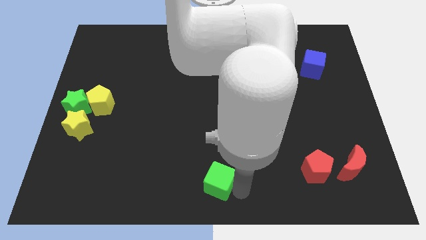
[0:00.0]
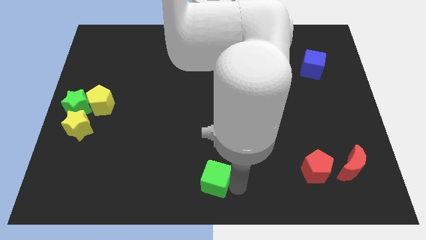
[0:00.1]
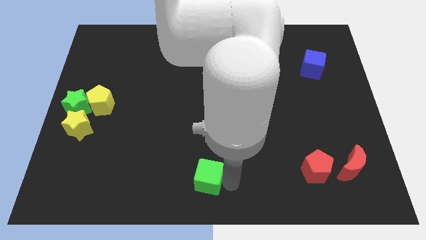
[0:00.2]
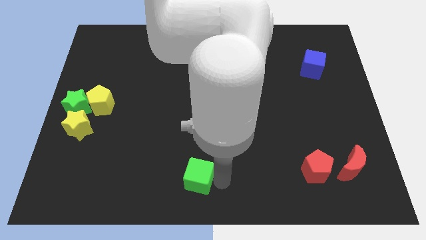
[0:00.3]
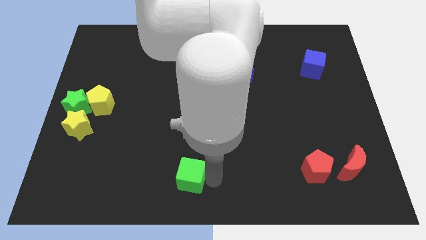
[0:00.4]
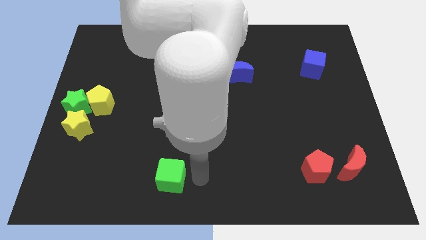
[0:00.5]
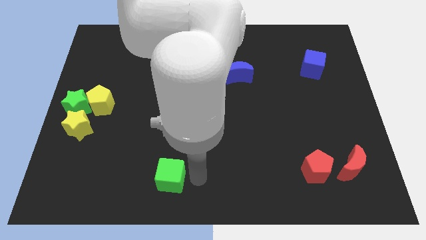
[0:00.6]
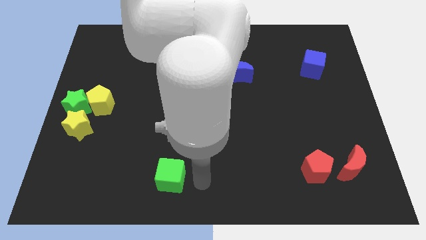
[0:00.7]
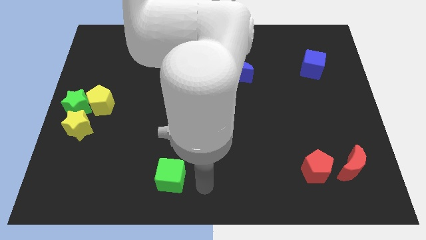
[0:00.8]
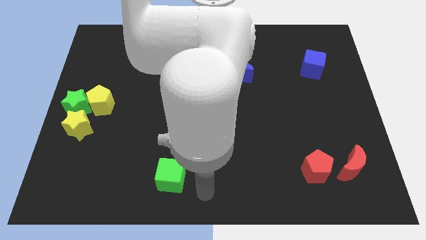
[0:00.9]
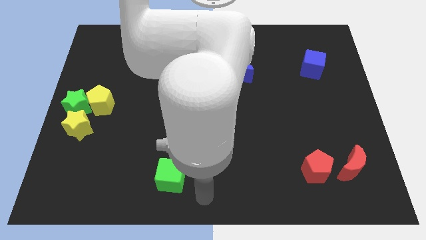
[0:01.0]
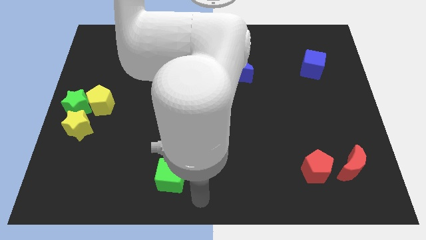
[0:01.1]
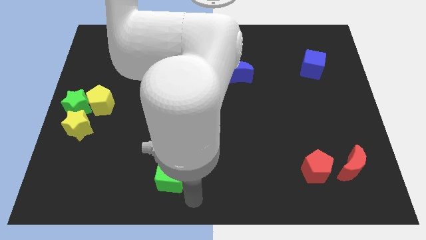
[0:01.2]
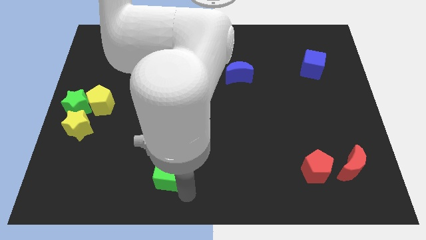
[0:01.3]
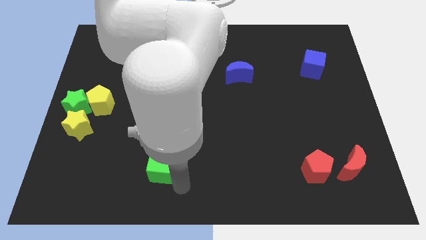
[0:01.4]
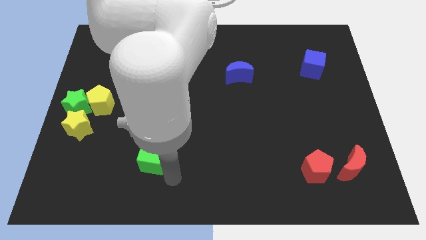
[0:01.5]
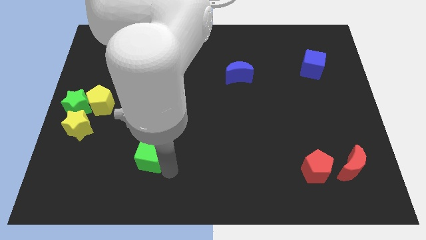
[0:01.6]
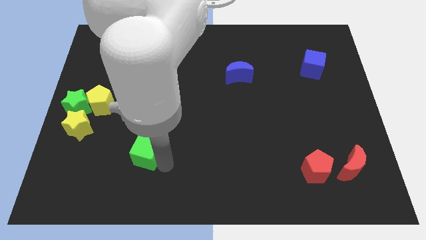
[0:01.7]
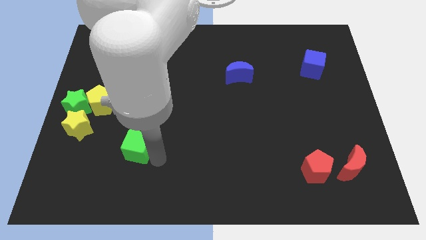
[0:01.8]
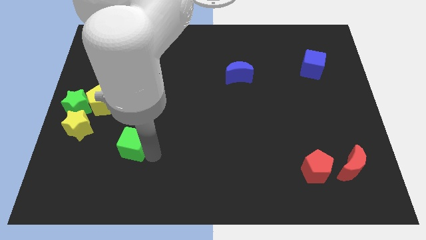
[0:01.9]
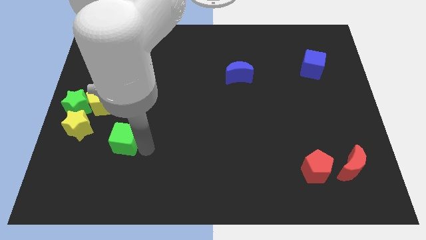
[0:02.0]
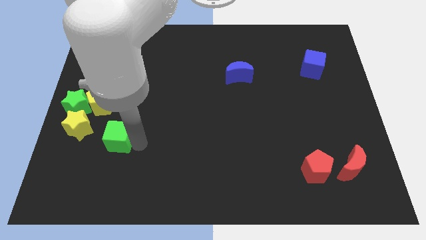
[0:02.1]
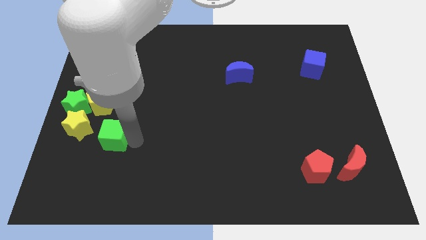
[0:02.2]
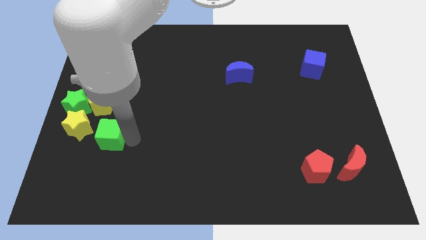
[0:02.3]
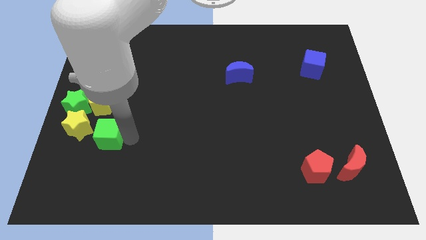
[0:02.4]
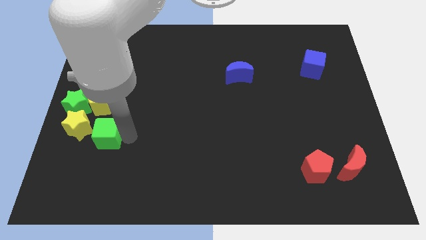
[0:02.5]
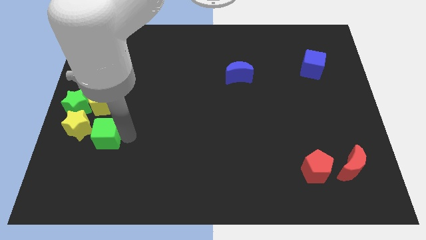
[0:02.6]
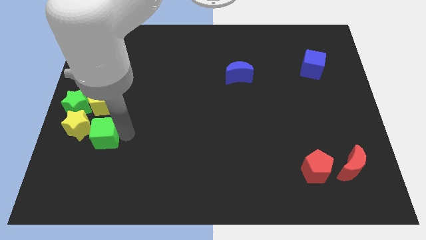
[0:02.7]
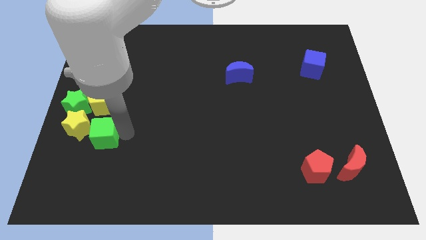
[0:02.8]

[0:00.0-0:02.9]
push the green cube to the bottom of the yellow pentagon

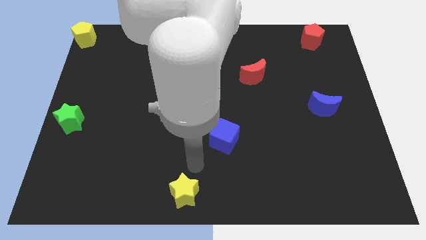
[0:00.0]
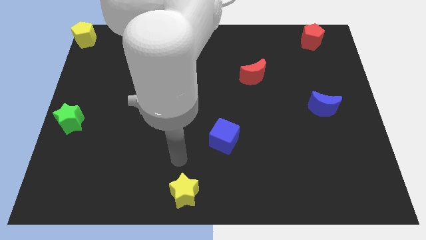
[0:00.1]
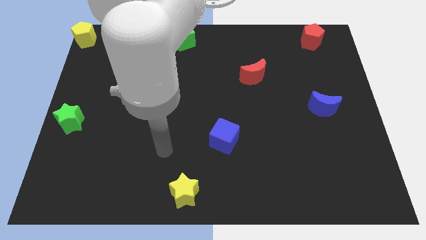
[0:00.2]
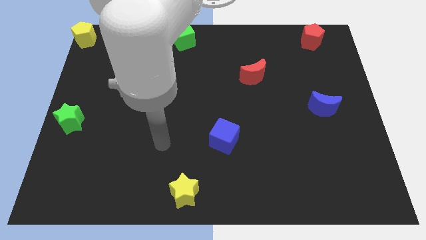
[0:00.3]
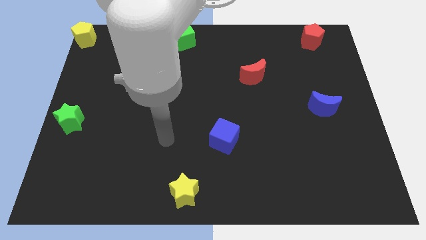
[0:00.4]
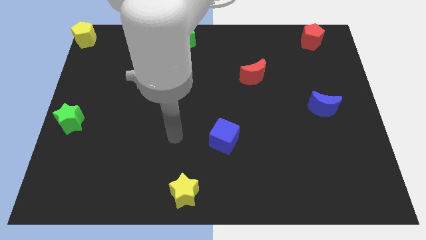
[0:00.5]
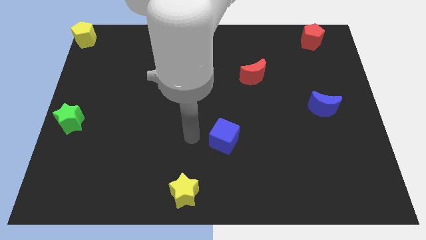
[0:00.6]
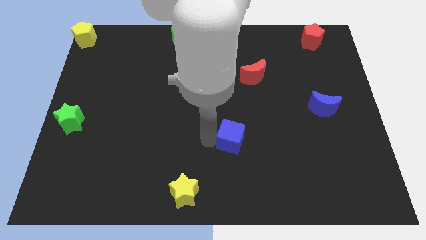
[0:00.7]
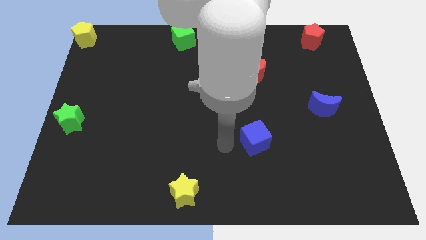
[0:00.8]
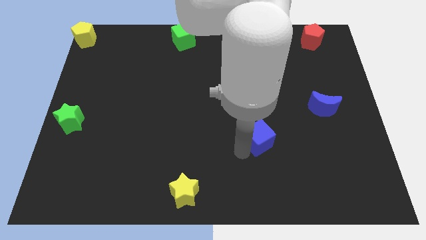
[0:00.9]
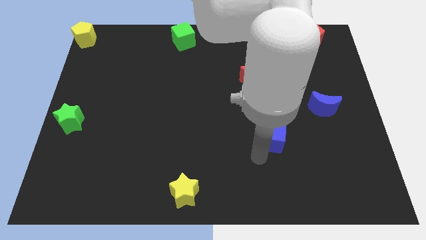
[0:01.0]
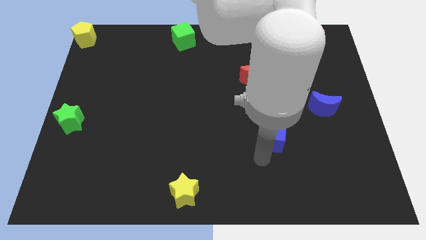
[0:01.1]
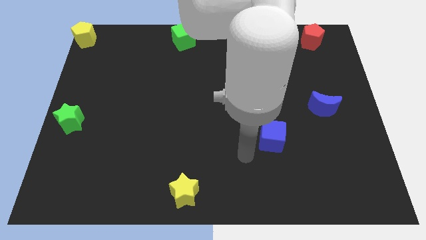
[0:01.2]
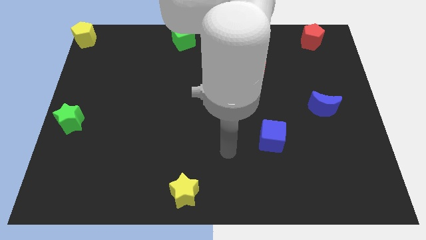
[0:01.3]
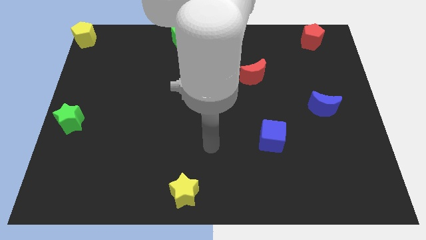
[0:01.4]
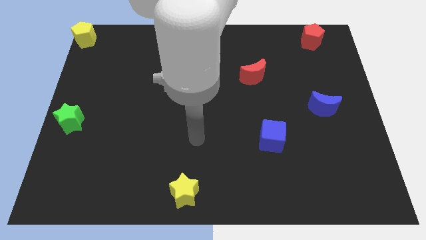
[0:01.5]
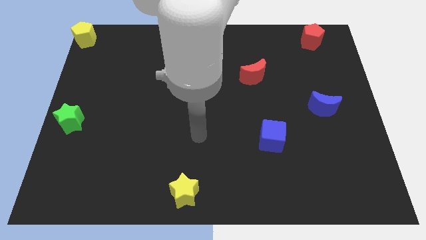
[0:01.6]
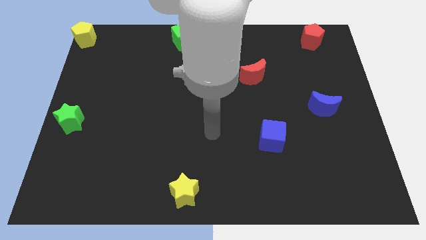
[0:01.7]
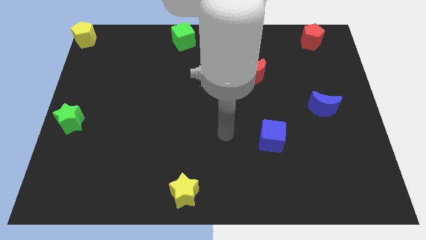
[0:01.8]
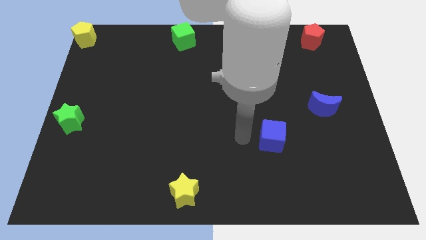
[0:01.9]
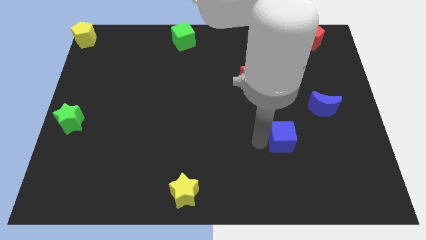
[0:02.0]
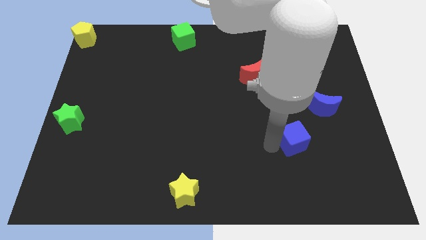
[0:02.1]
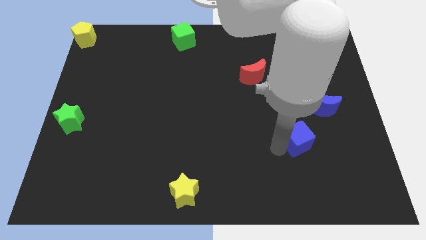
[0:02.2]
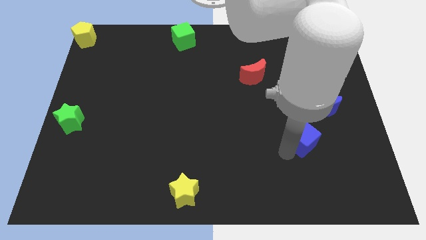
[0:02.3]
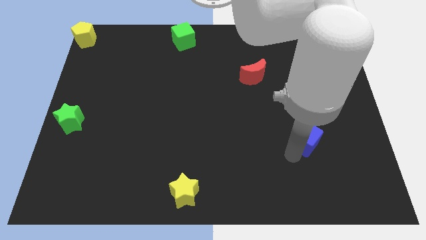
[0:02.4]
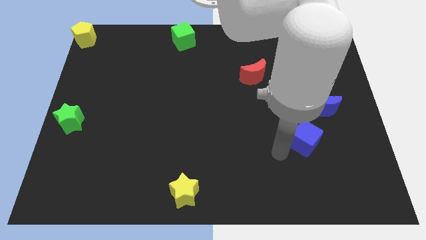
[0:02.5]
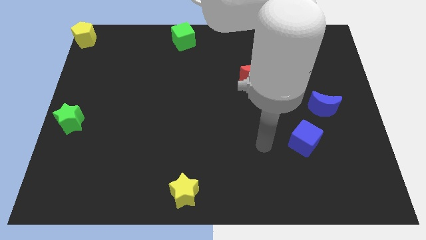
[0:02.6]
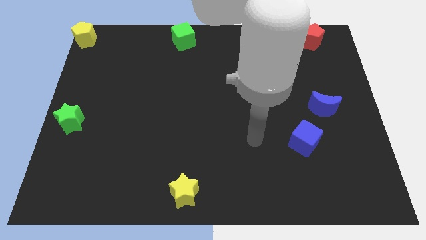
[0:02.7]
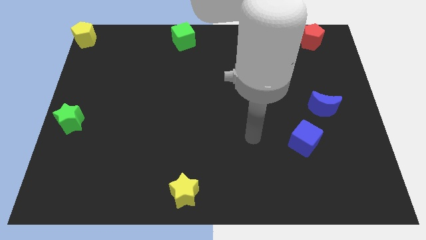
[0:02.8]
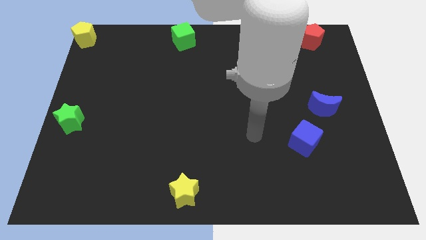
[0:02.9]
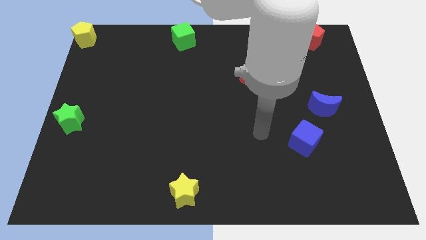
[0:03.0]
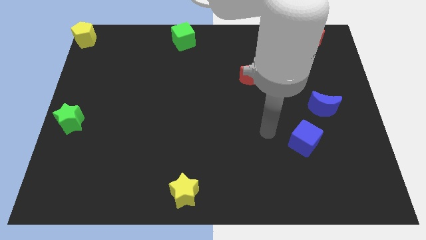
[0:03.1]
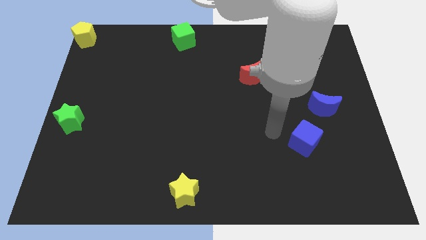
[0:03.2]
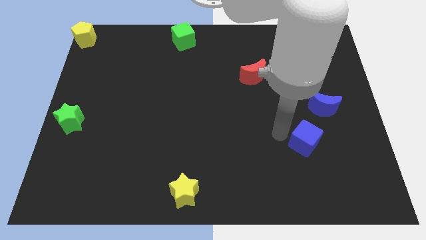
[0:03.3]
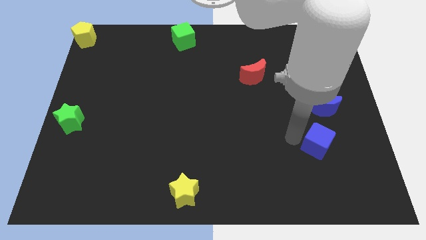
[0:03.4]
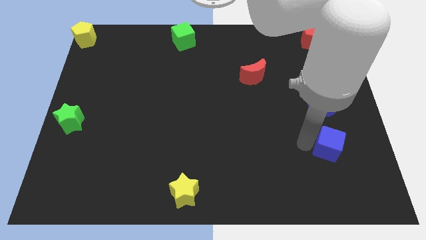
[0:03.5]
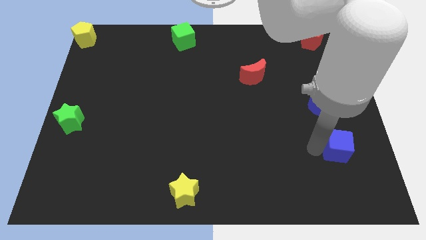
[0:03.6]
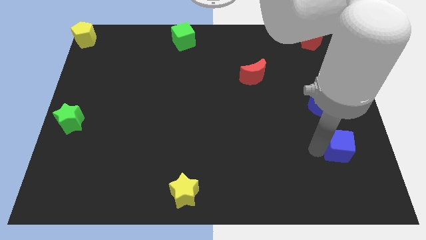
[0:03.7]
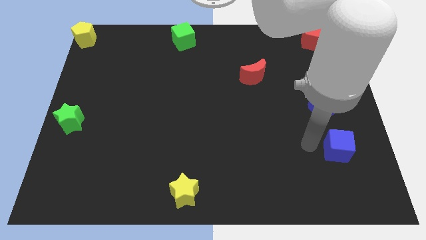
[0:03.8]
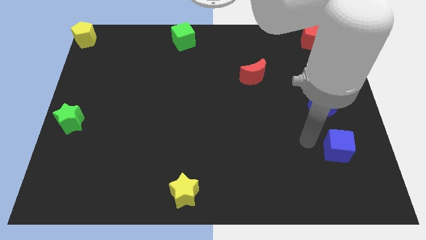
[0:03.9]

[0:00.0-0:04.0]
push the blue cube towards the right center of the board

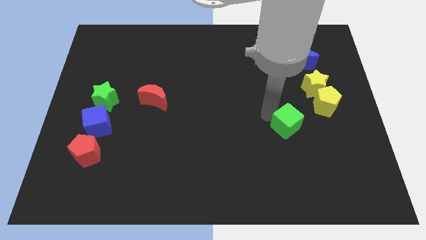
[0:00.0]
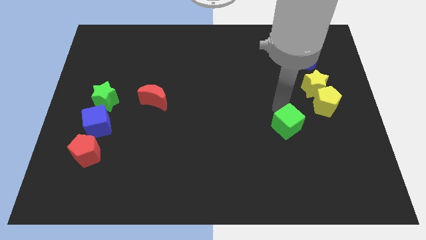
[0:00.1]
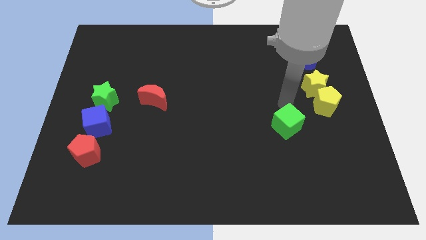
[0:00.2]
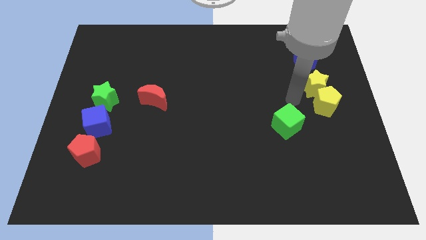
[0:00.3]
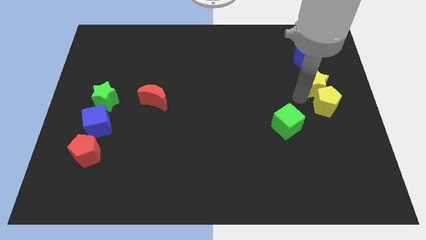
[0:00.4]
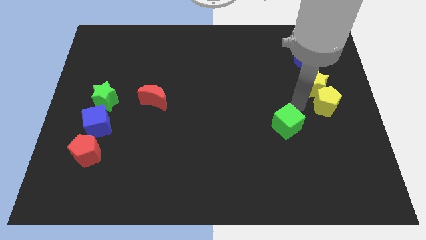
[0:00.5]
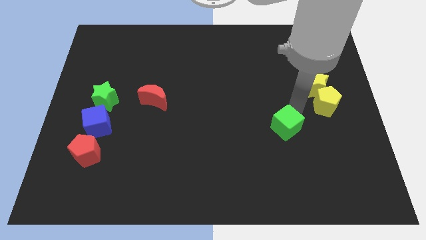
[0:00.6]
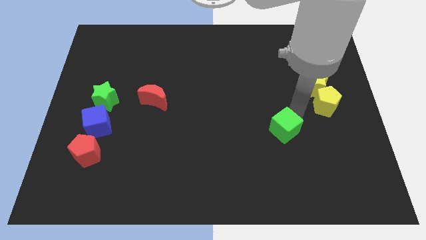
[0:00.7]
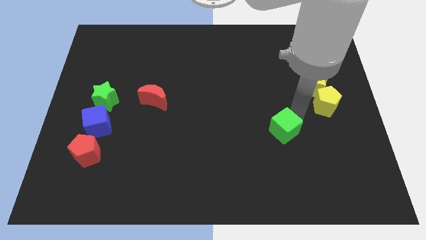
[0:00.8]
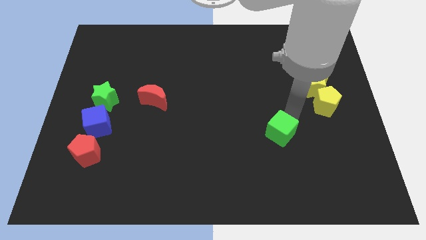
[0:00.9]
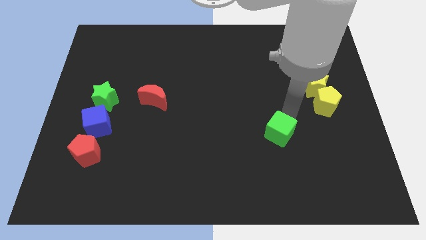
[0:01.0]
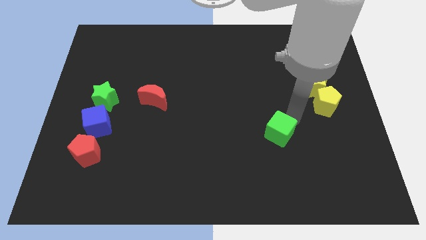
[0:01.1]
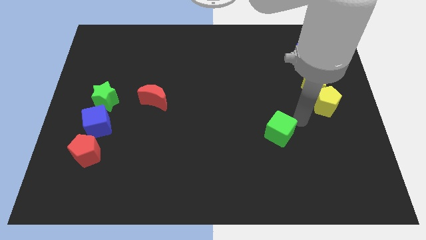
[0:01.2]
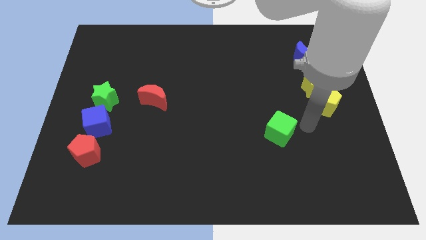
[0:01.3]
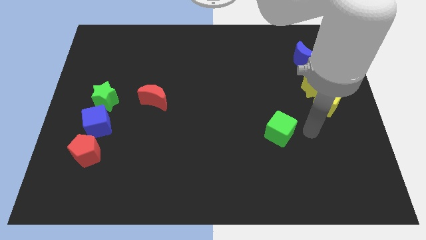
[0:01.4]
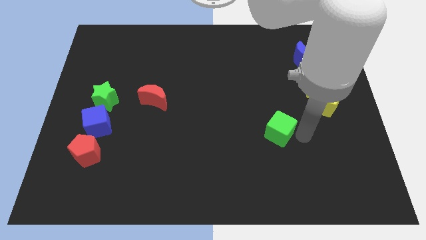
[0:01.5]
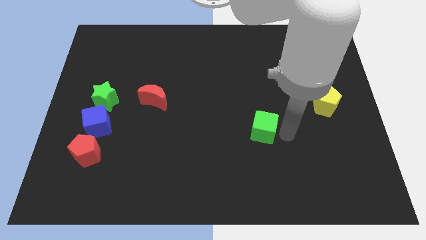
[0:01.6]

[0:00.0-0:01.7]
move green cube towards center

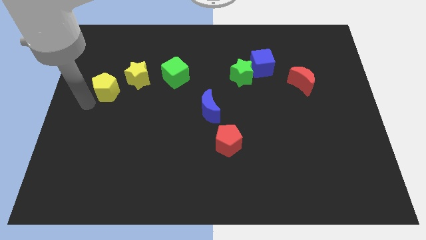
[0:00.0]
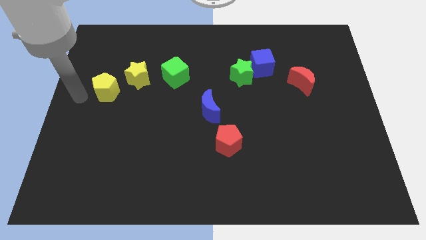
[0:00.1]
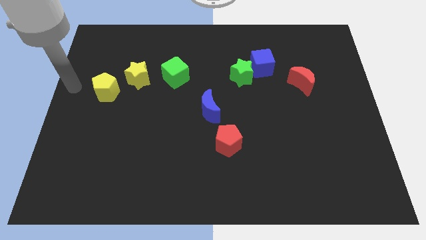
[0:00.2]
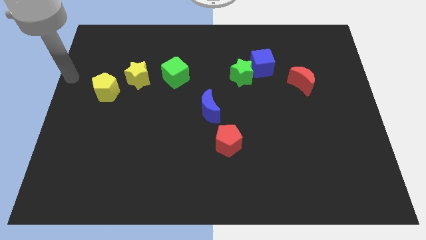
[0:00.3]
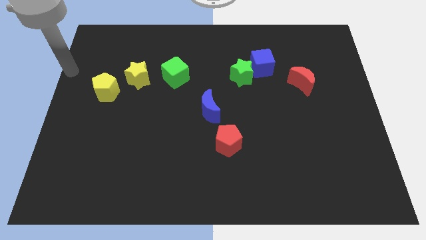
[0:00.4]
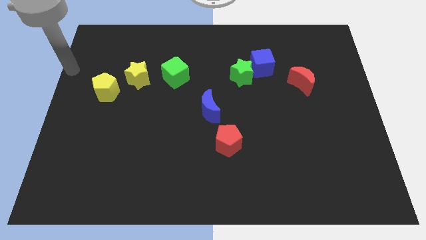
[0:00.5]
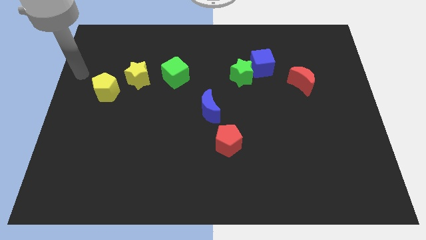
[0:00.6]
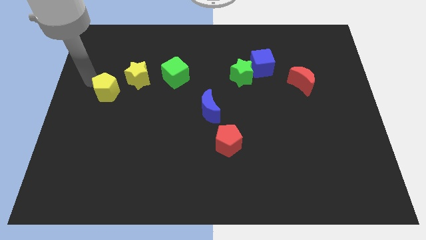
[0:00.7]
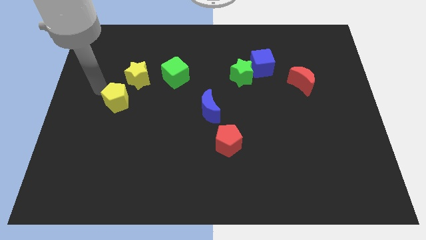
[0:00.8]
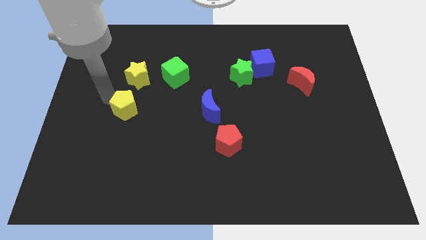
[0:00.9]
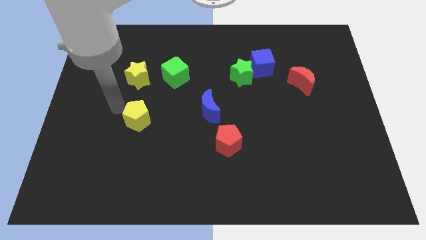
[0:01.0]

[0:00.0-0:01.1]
push yellow pentagon below yellow star
